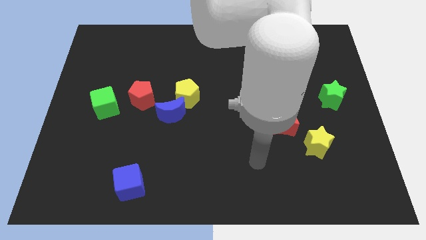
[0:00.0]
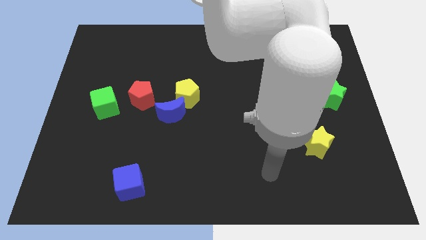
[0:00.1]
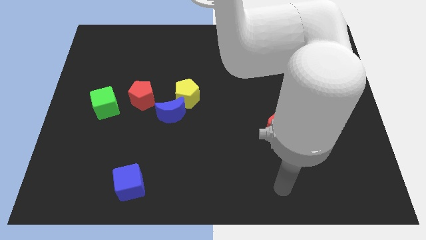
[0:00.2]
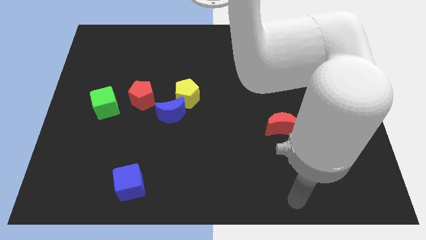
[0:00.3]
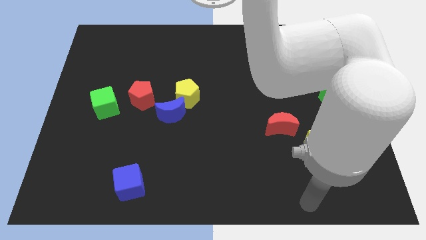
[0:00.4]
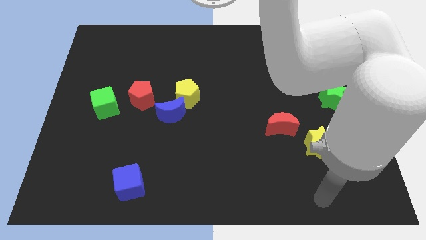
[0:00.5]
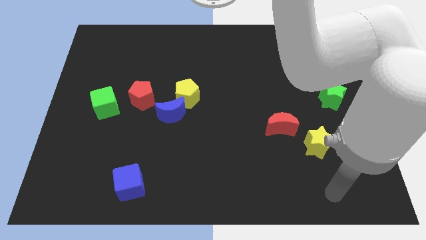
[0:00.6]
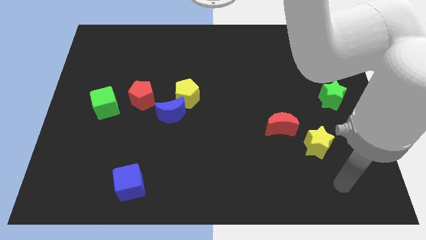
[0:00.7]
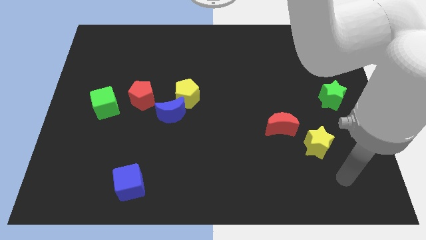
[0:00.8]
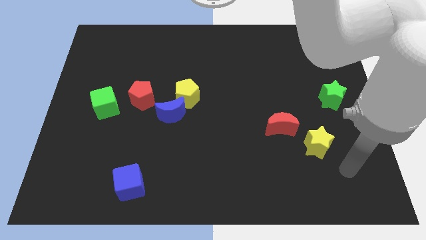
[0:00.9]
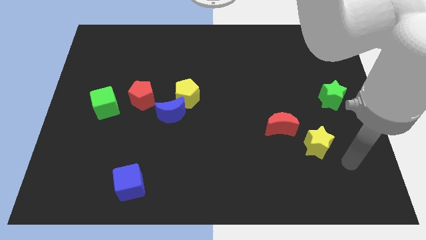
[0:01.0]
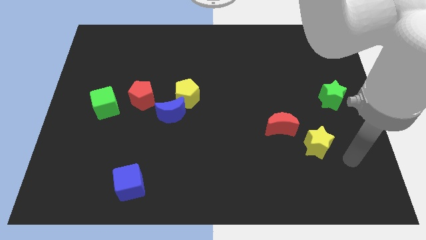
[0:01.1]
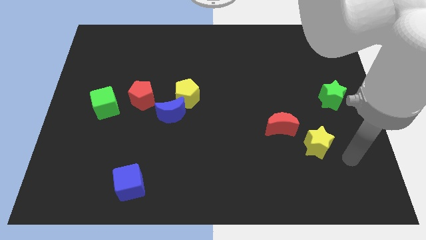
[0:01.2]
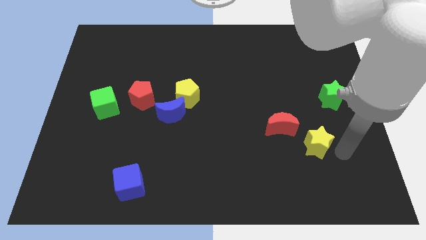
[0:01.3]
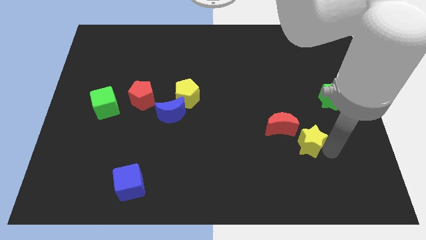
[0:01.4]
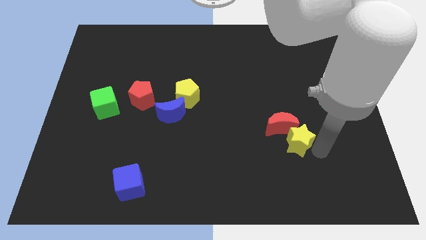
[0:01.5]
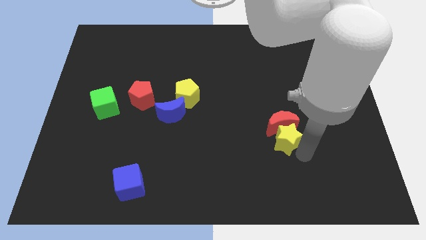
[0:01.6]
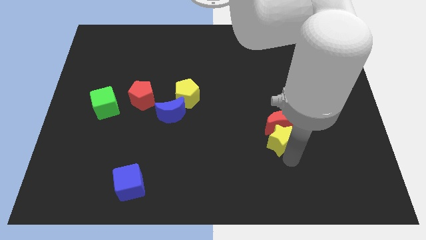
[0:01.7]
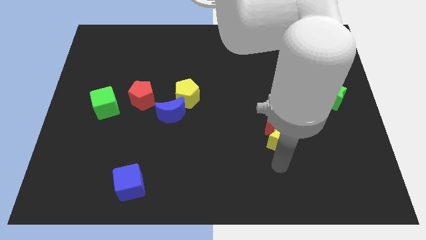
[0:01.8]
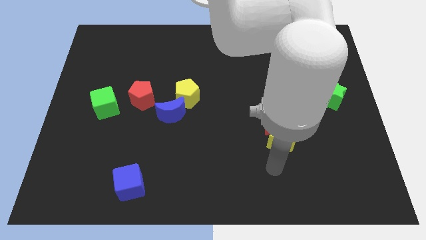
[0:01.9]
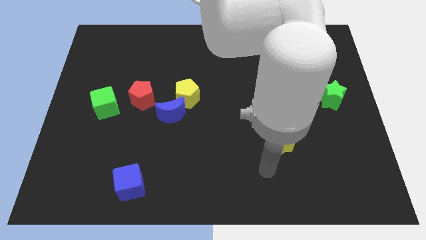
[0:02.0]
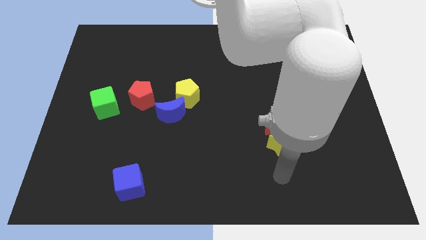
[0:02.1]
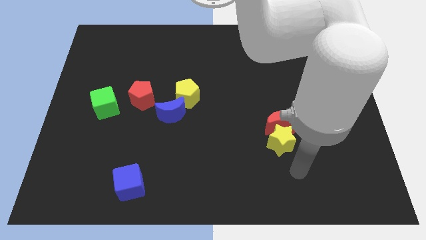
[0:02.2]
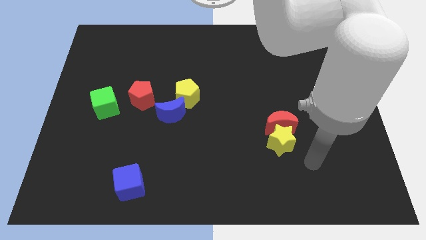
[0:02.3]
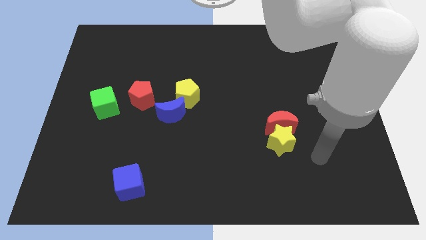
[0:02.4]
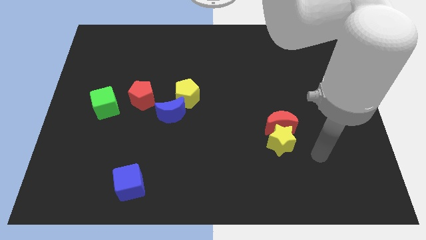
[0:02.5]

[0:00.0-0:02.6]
move the yellow star to the bottom of the red moon

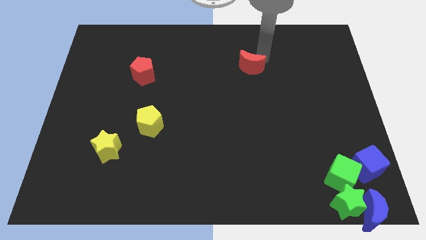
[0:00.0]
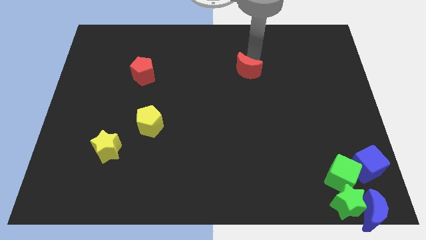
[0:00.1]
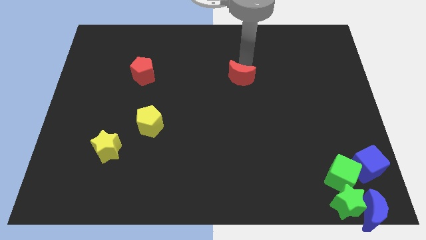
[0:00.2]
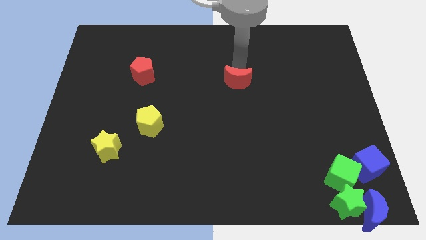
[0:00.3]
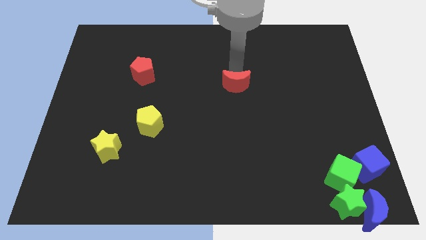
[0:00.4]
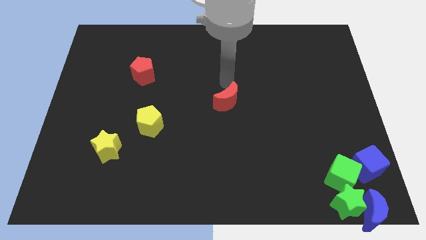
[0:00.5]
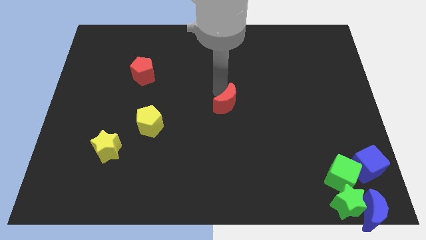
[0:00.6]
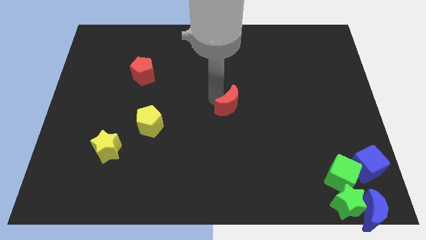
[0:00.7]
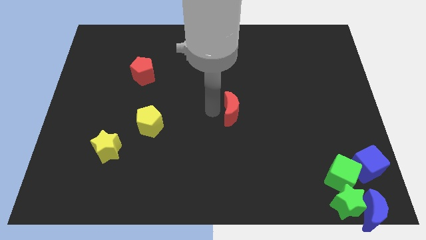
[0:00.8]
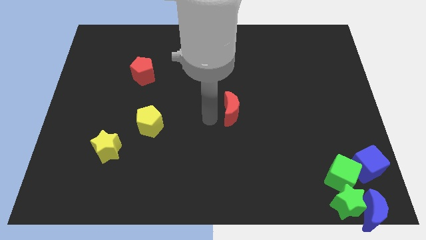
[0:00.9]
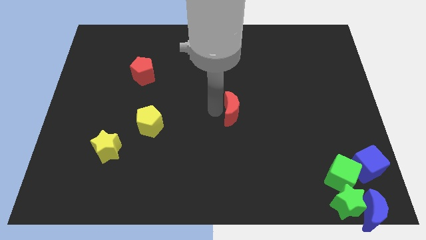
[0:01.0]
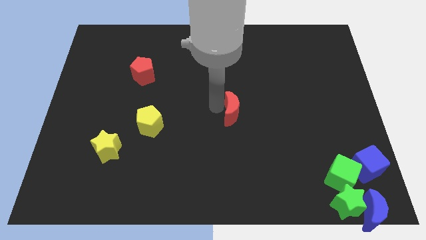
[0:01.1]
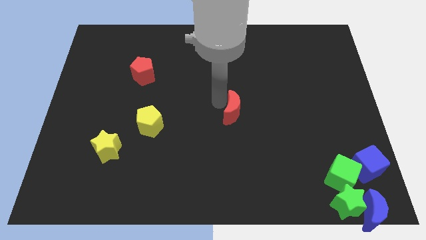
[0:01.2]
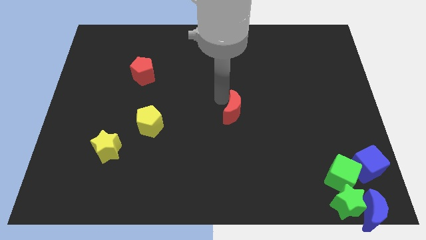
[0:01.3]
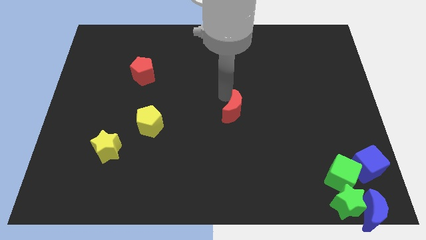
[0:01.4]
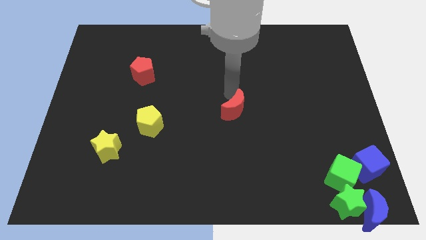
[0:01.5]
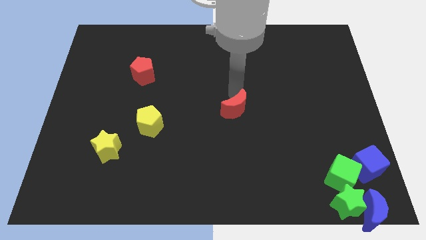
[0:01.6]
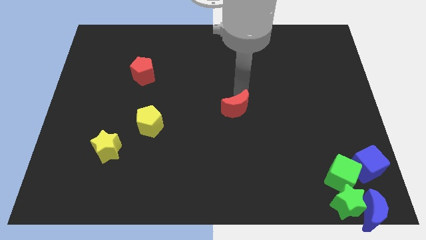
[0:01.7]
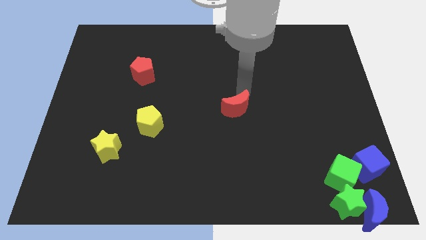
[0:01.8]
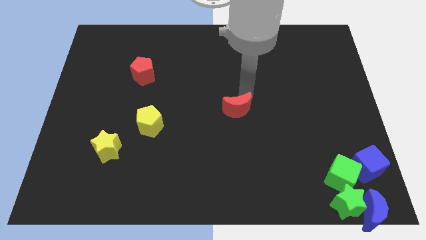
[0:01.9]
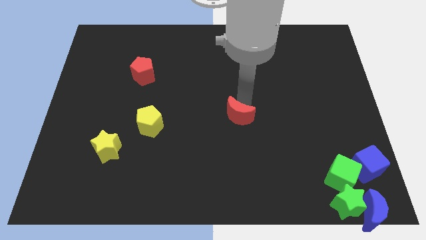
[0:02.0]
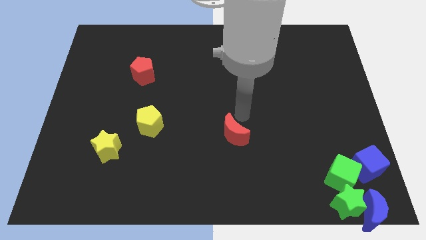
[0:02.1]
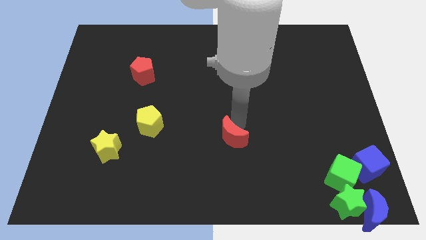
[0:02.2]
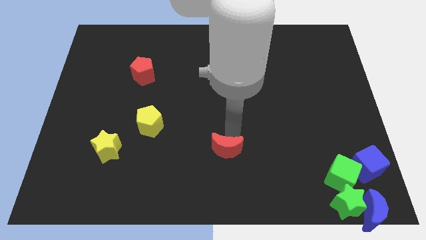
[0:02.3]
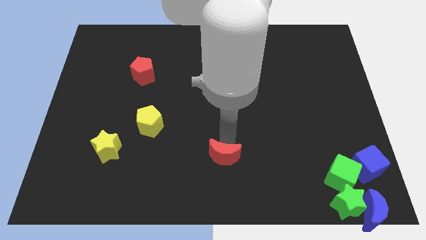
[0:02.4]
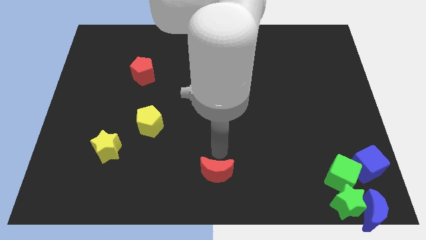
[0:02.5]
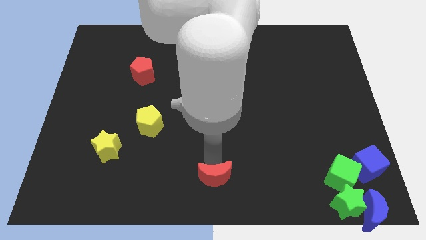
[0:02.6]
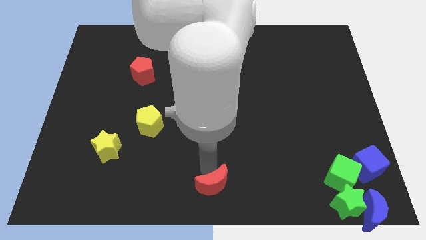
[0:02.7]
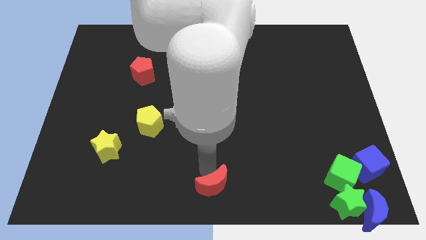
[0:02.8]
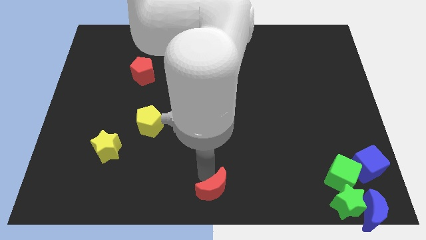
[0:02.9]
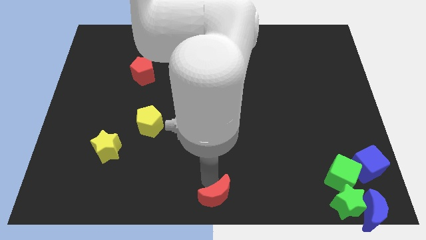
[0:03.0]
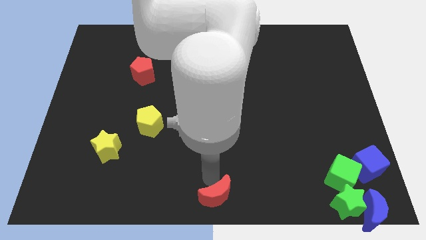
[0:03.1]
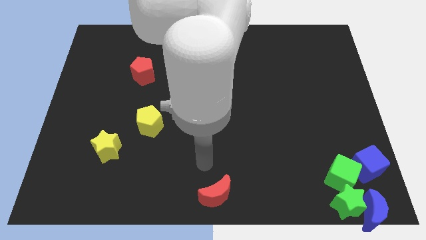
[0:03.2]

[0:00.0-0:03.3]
push the red moon to the bottom center of the board

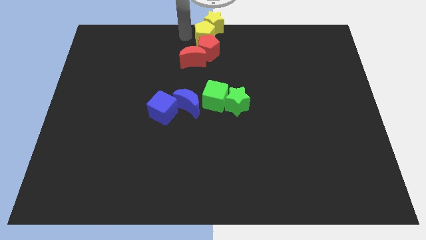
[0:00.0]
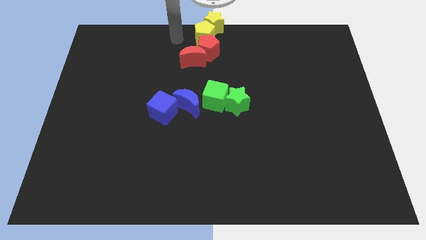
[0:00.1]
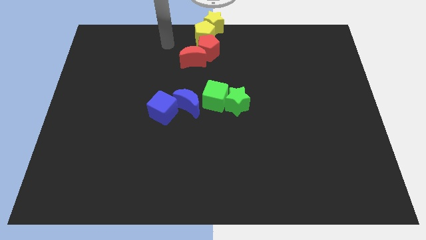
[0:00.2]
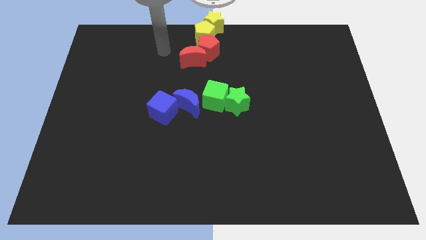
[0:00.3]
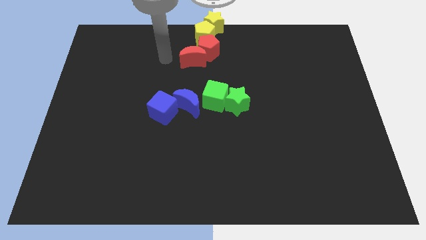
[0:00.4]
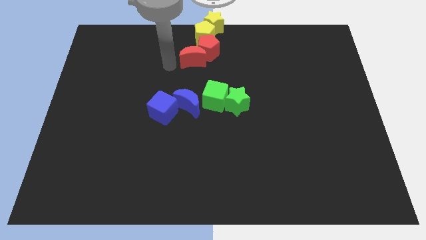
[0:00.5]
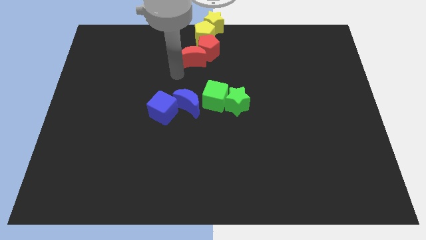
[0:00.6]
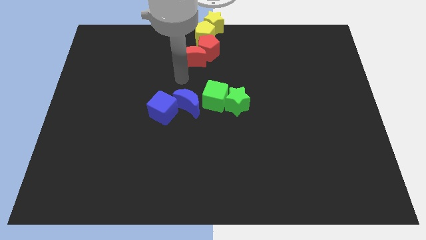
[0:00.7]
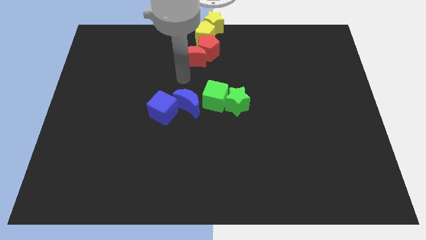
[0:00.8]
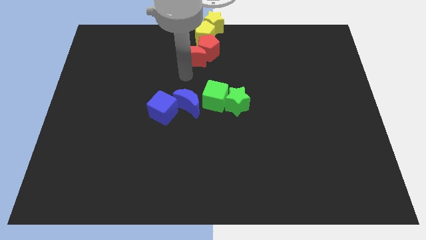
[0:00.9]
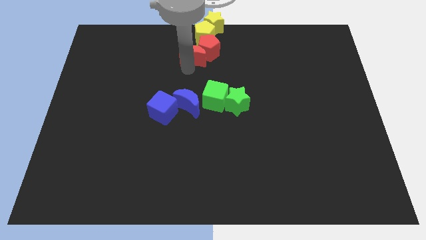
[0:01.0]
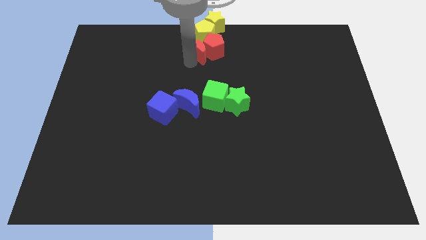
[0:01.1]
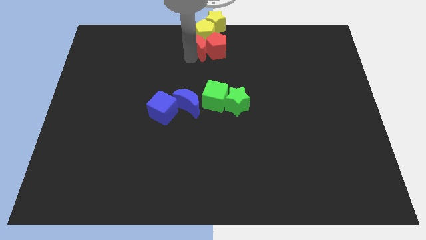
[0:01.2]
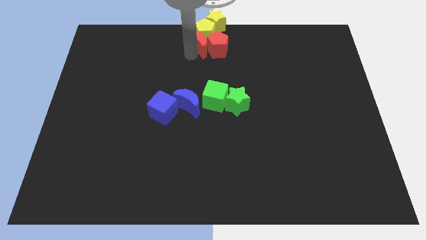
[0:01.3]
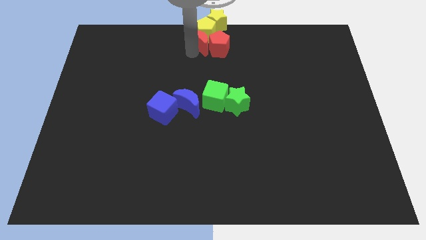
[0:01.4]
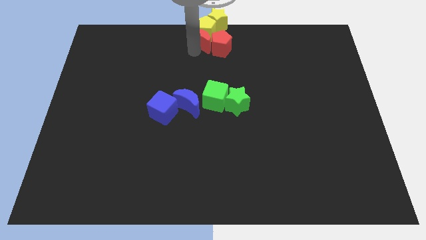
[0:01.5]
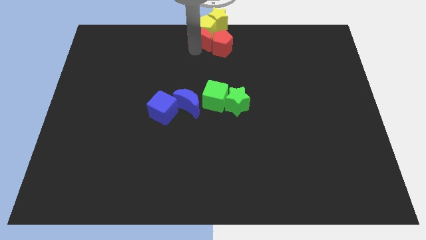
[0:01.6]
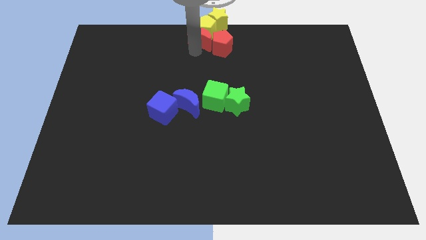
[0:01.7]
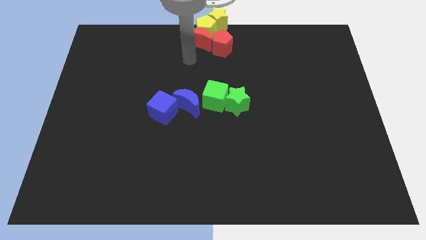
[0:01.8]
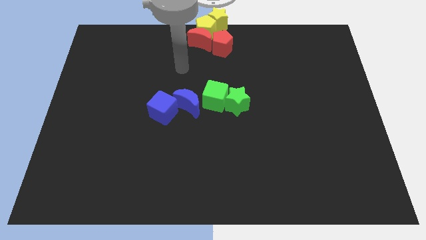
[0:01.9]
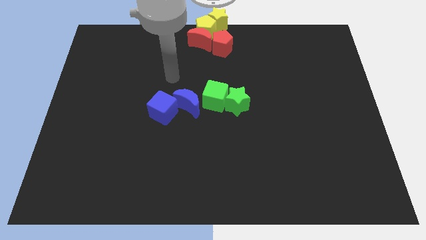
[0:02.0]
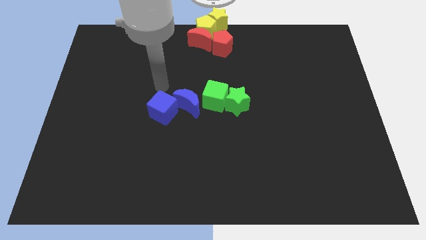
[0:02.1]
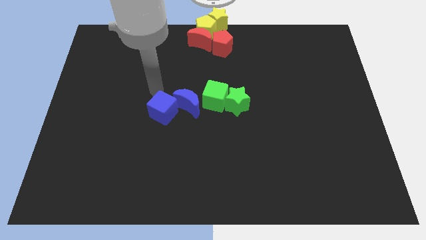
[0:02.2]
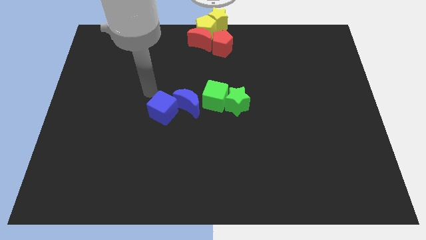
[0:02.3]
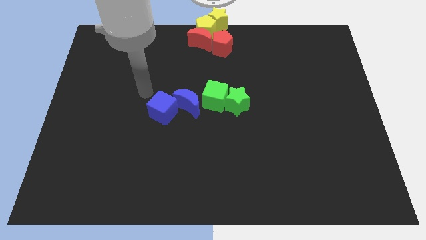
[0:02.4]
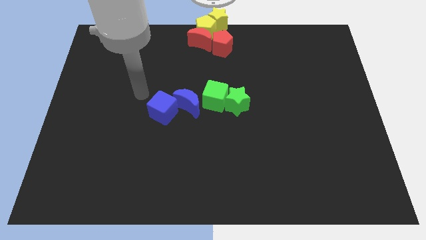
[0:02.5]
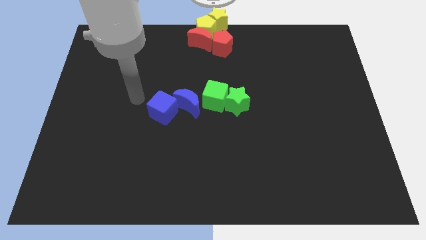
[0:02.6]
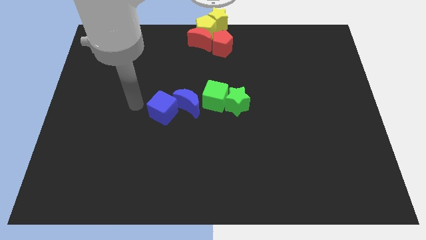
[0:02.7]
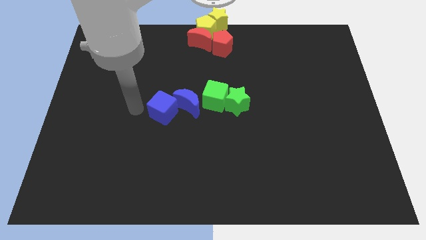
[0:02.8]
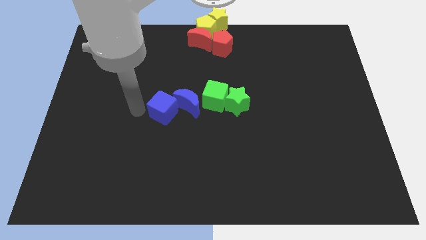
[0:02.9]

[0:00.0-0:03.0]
push the red crescent to the bottom of the yellow pentagon
